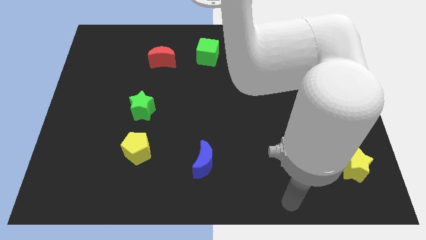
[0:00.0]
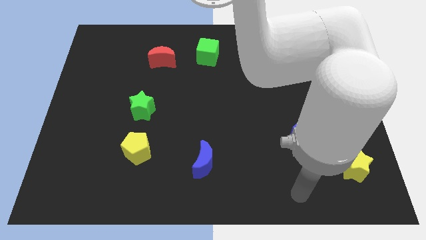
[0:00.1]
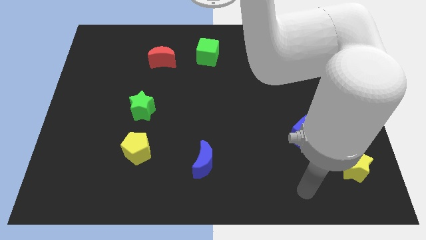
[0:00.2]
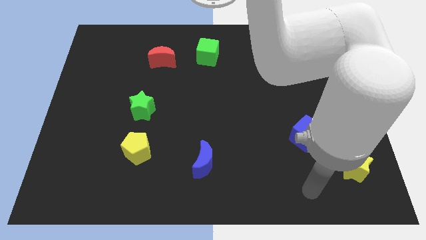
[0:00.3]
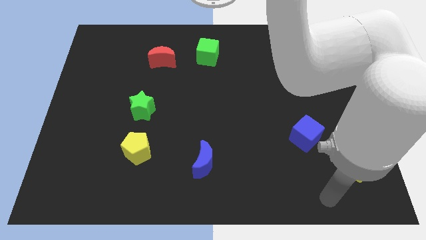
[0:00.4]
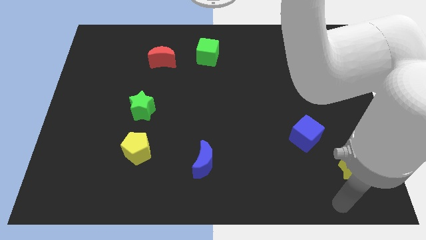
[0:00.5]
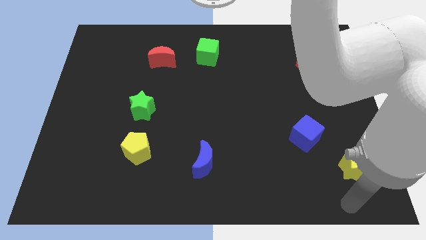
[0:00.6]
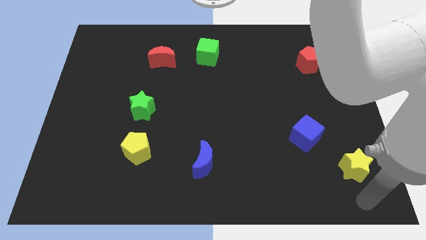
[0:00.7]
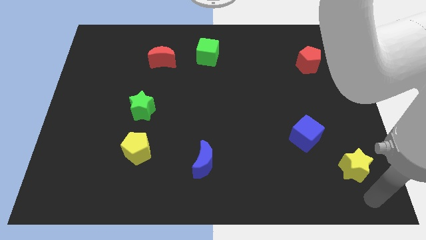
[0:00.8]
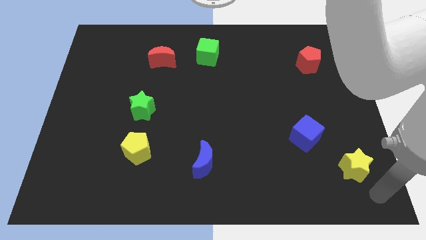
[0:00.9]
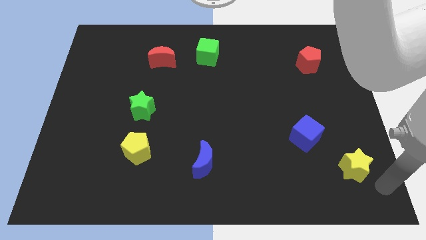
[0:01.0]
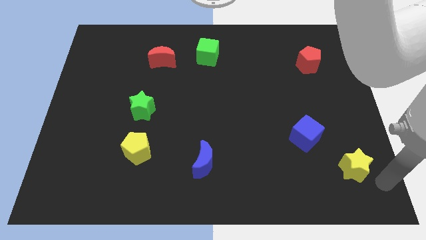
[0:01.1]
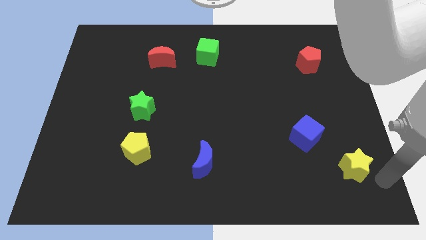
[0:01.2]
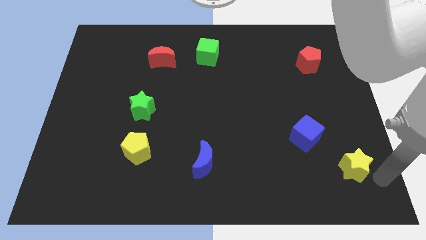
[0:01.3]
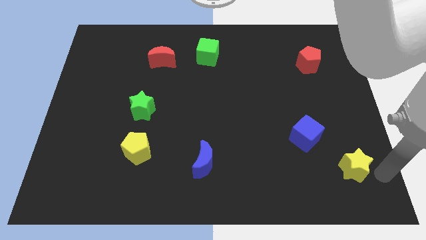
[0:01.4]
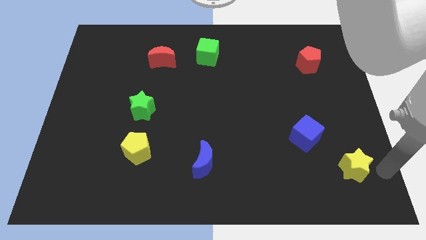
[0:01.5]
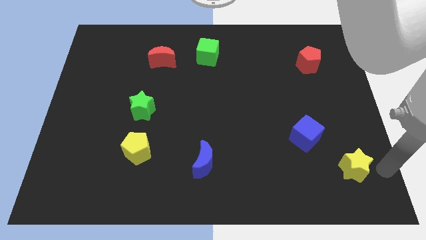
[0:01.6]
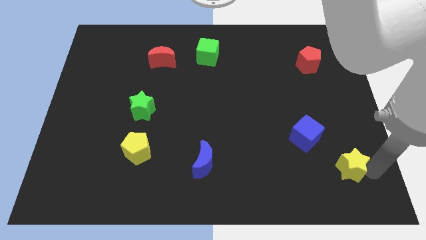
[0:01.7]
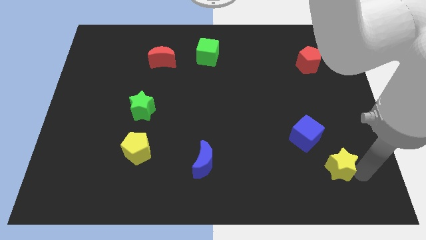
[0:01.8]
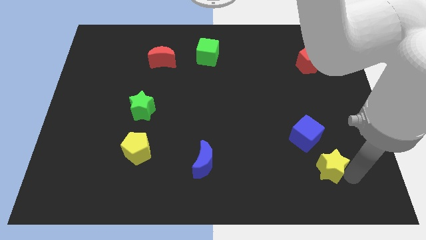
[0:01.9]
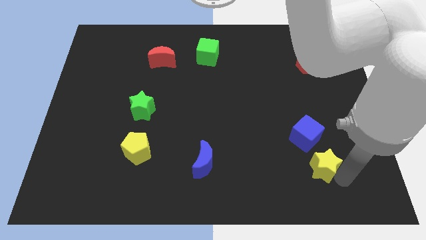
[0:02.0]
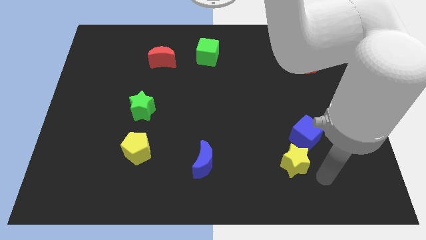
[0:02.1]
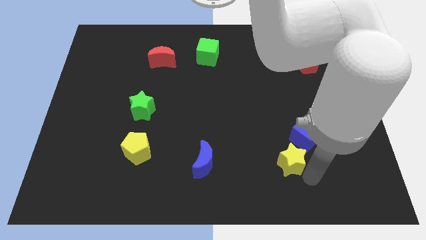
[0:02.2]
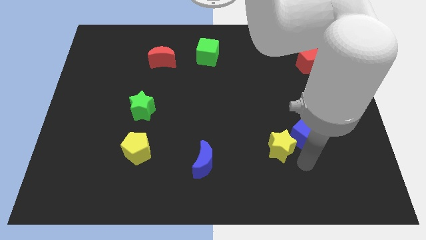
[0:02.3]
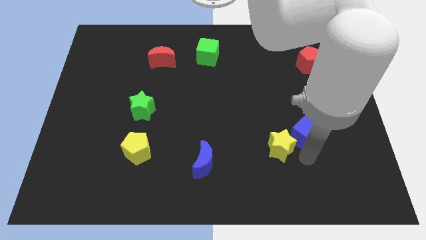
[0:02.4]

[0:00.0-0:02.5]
move the yellow star close to the left side of the blue cube

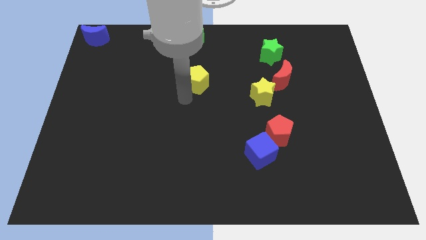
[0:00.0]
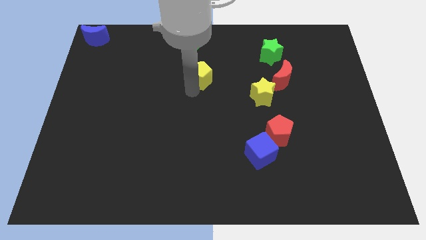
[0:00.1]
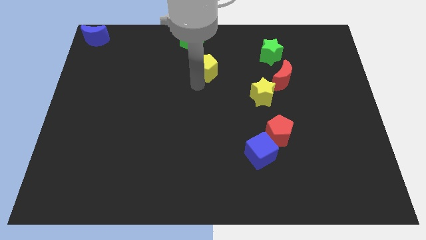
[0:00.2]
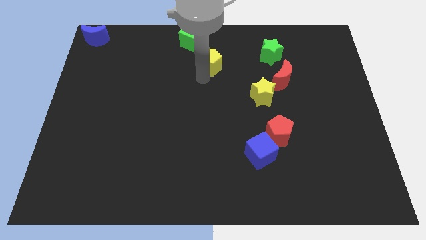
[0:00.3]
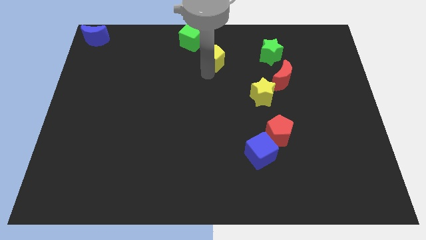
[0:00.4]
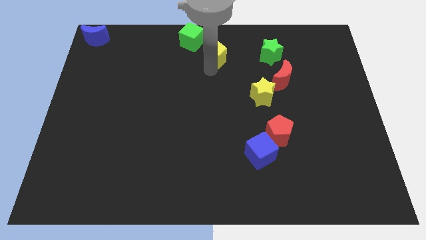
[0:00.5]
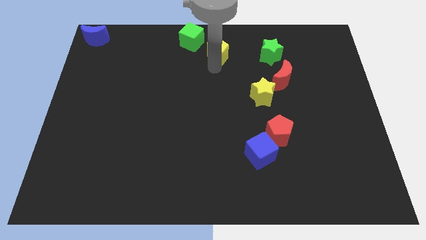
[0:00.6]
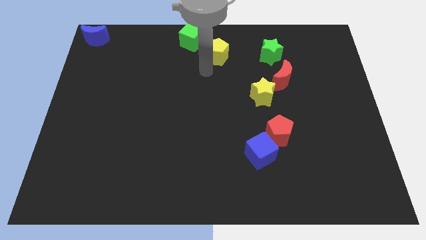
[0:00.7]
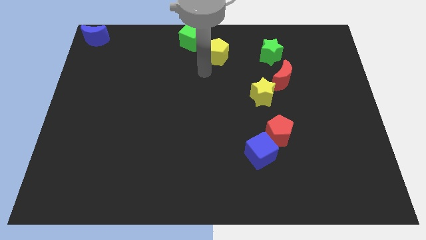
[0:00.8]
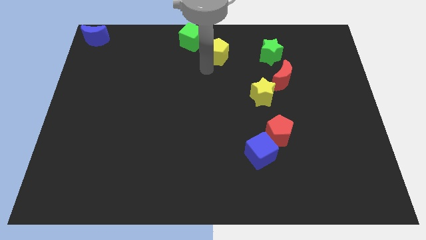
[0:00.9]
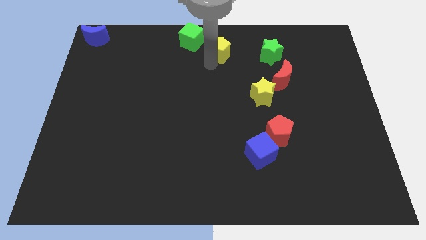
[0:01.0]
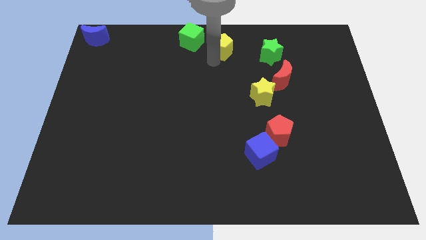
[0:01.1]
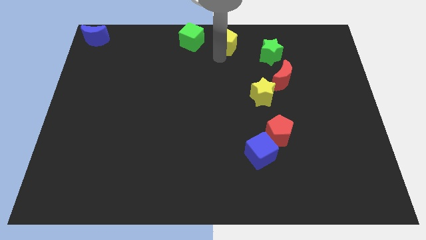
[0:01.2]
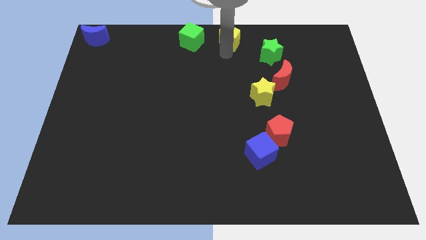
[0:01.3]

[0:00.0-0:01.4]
push yellow pentagon to the right of the green cube

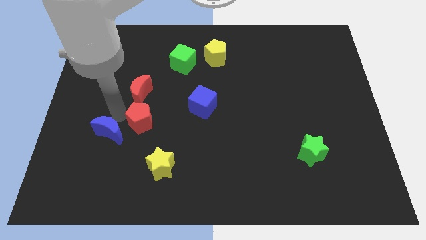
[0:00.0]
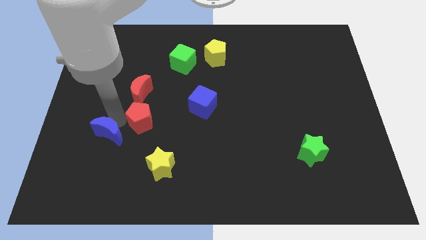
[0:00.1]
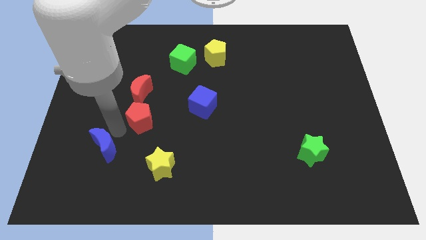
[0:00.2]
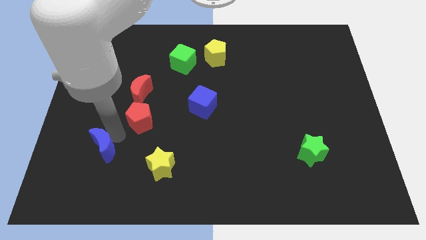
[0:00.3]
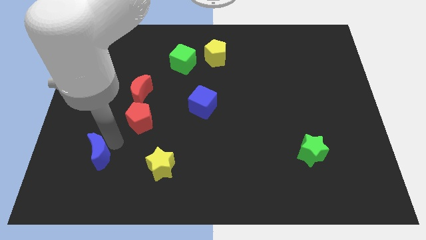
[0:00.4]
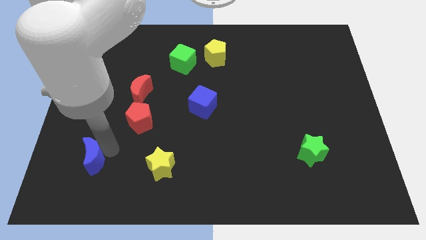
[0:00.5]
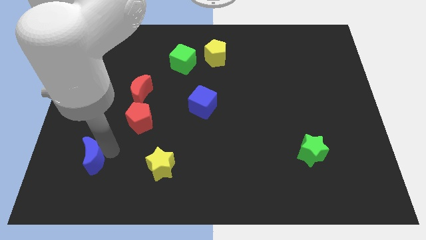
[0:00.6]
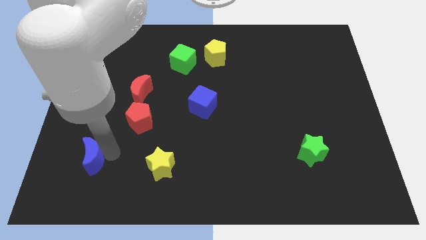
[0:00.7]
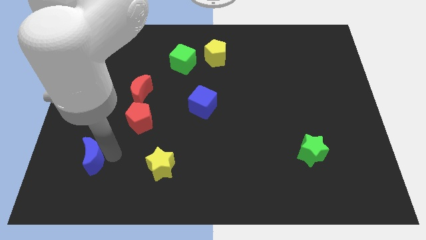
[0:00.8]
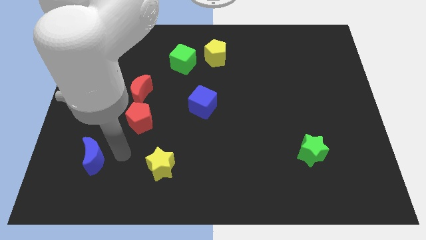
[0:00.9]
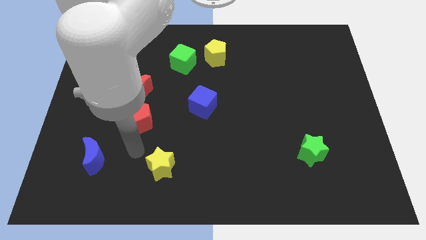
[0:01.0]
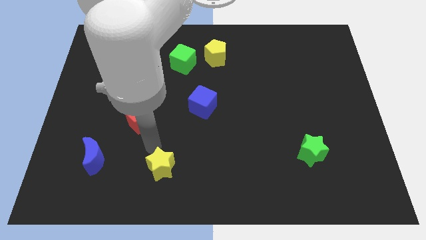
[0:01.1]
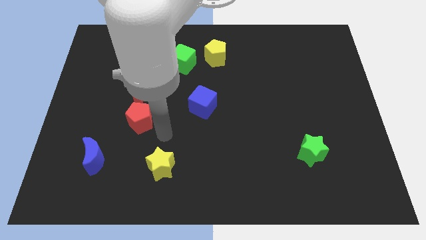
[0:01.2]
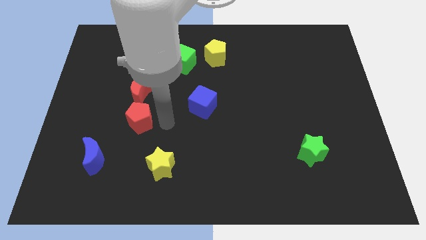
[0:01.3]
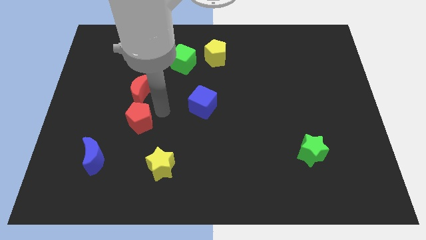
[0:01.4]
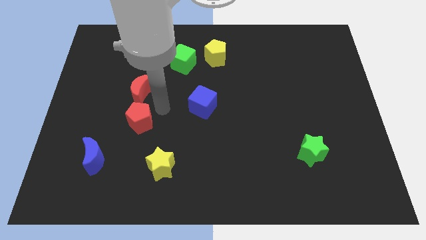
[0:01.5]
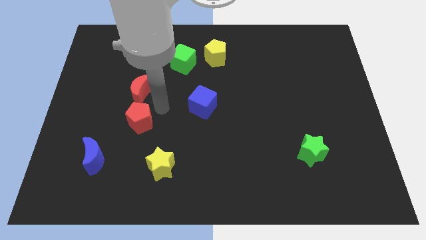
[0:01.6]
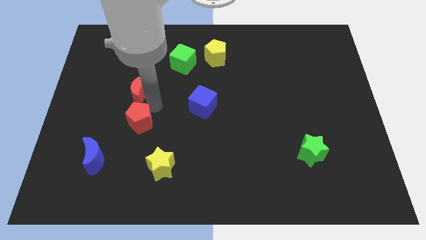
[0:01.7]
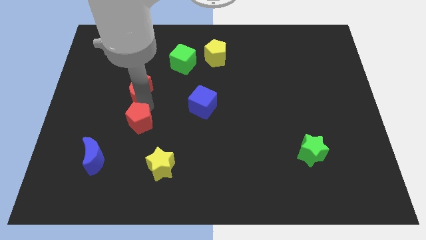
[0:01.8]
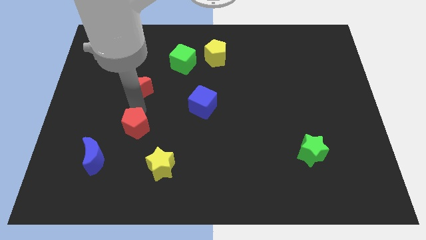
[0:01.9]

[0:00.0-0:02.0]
push the blue crescent towards the left bottom of the board

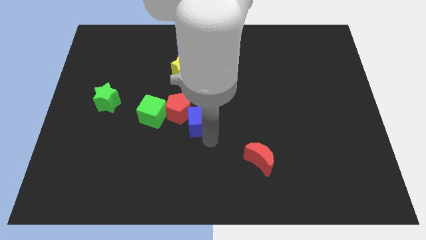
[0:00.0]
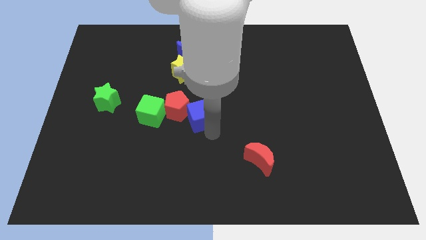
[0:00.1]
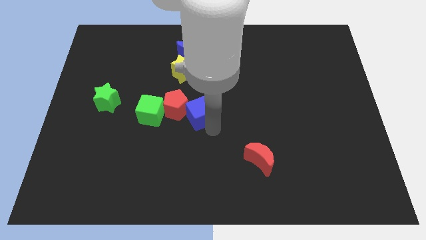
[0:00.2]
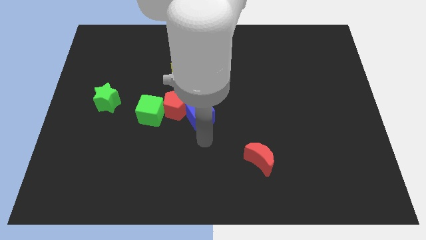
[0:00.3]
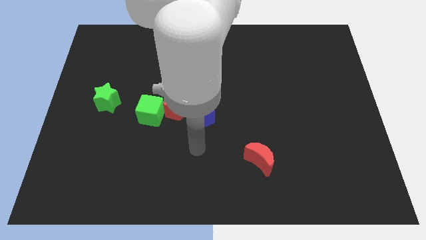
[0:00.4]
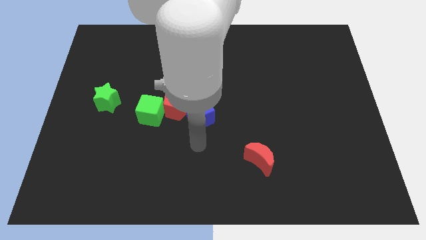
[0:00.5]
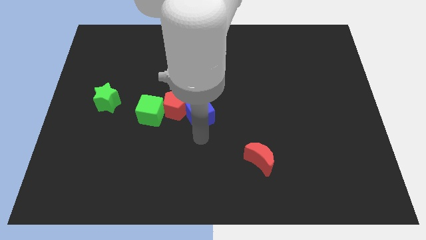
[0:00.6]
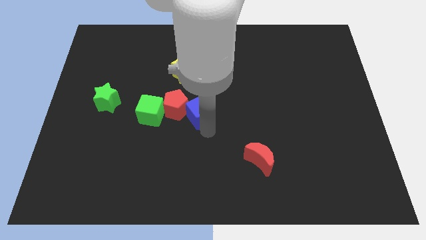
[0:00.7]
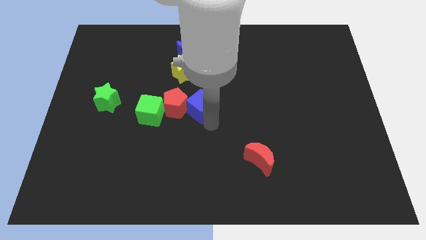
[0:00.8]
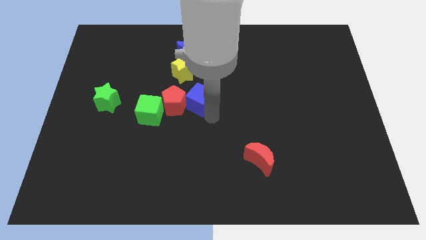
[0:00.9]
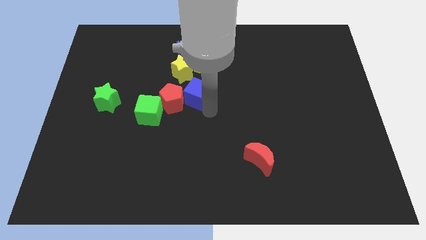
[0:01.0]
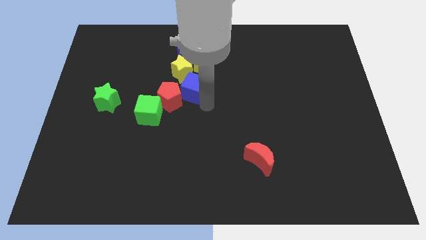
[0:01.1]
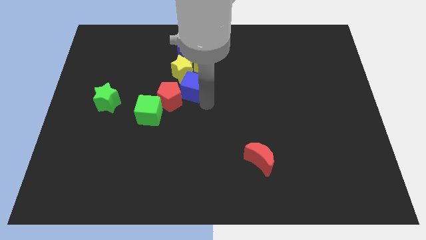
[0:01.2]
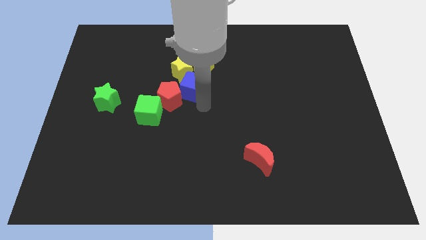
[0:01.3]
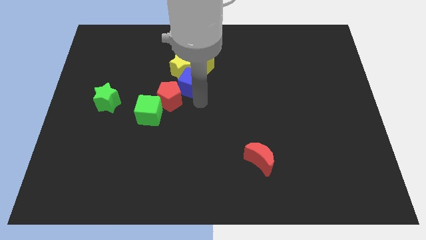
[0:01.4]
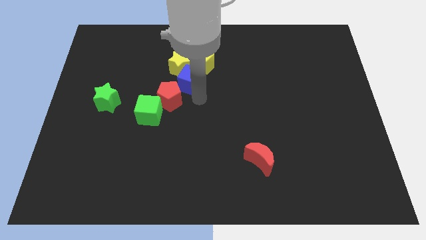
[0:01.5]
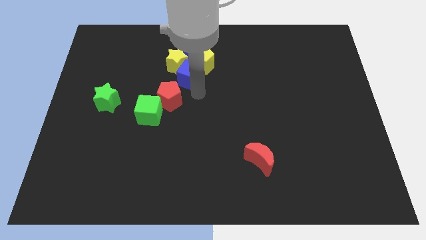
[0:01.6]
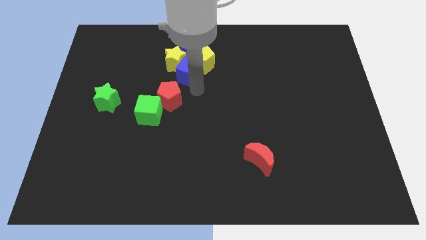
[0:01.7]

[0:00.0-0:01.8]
move blue cube into the yellow star

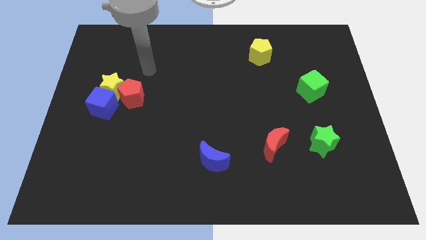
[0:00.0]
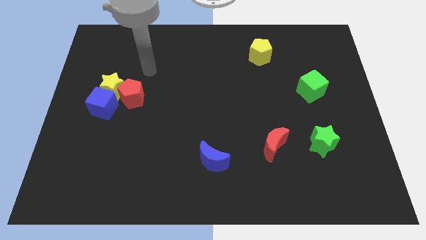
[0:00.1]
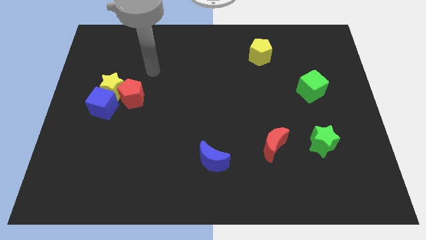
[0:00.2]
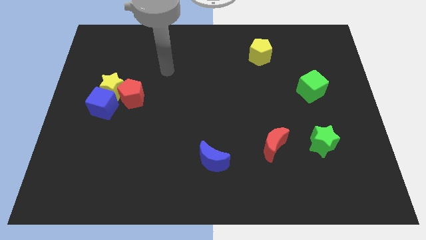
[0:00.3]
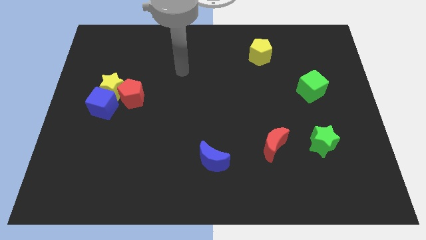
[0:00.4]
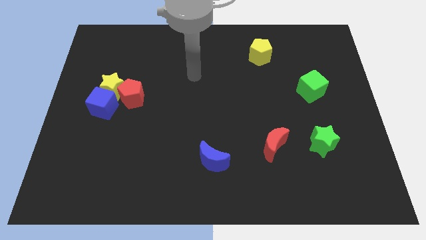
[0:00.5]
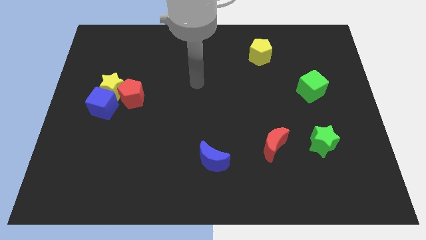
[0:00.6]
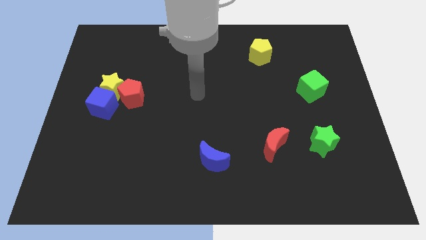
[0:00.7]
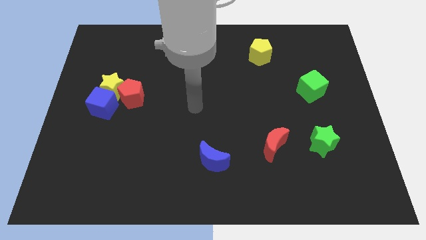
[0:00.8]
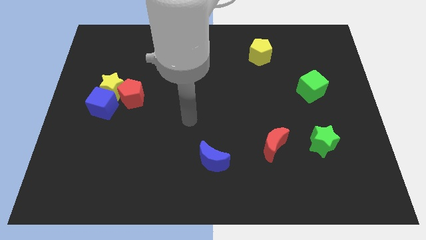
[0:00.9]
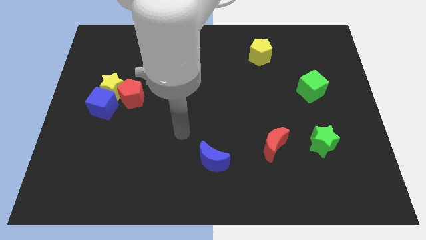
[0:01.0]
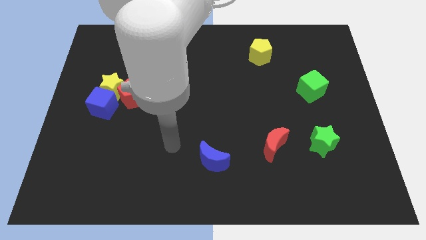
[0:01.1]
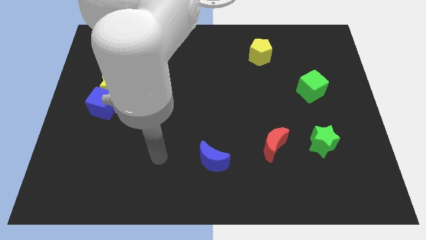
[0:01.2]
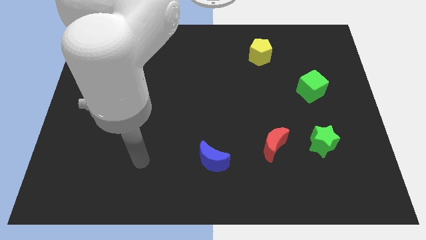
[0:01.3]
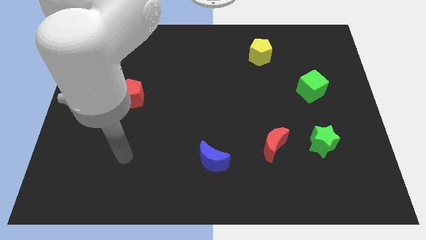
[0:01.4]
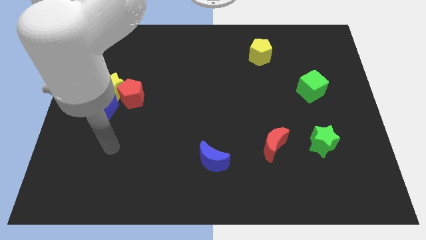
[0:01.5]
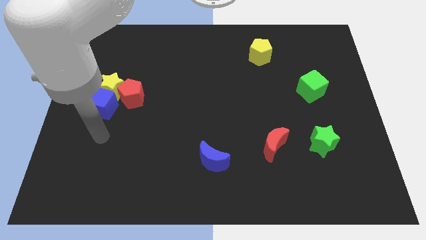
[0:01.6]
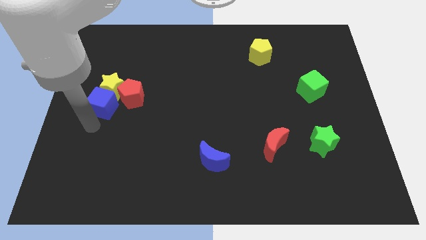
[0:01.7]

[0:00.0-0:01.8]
move your arm at the bottom of blue cube
